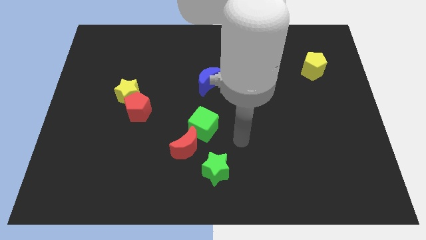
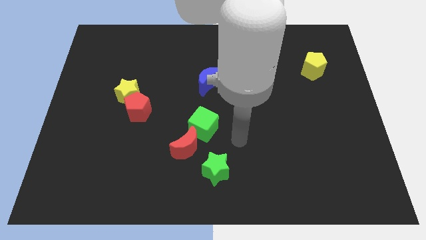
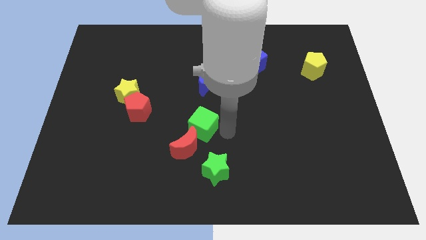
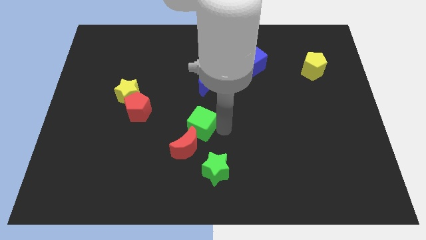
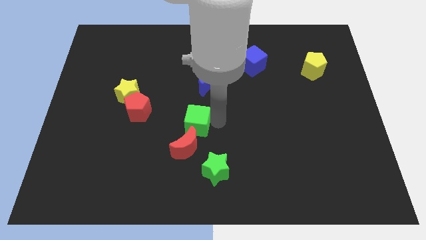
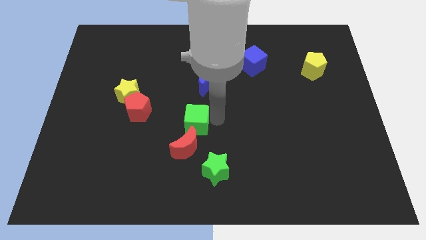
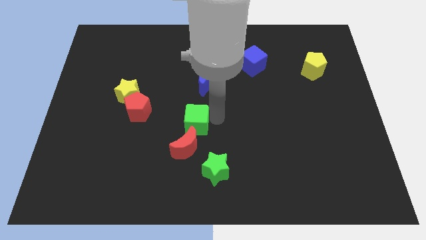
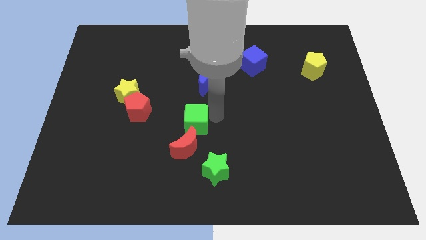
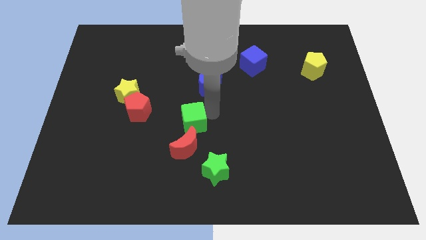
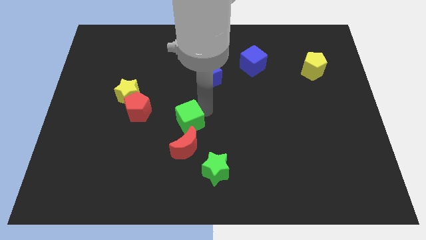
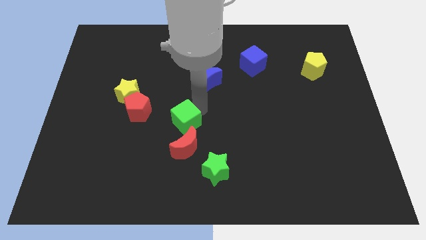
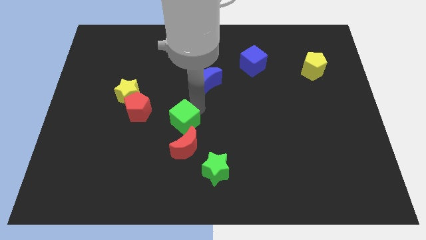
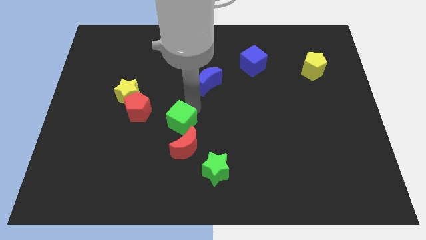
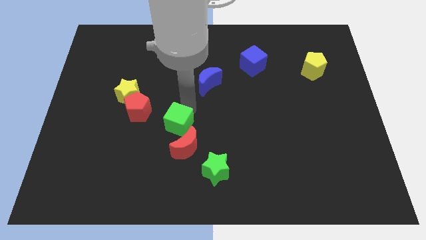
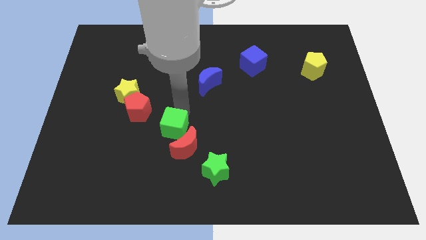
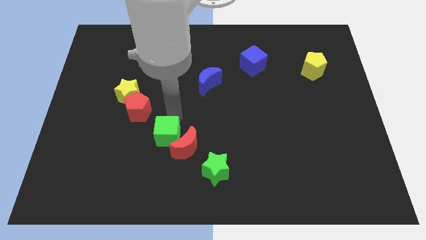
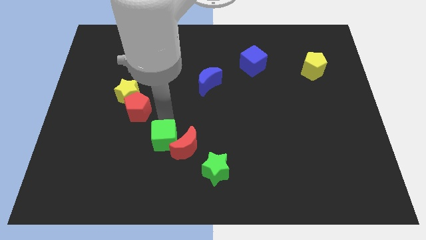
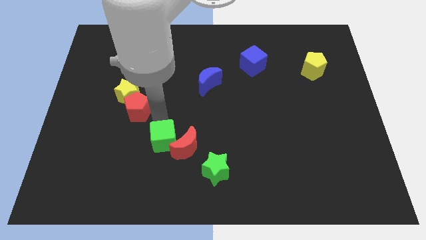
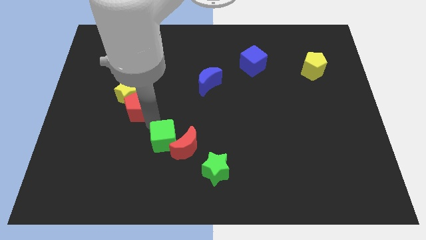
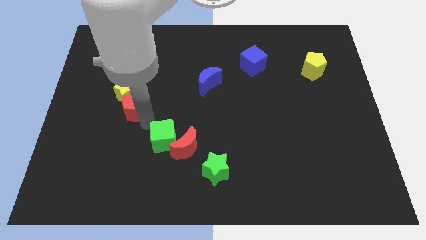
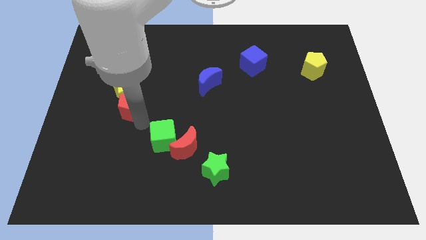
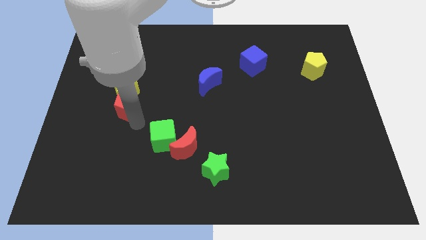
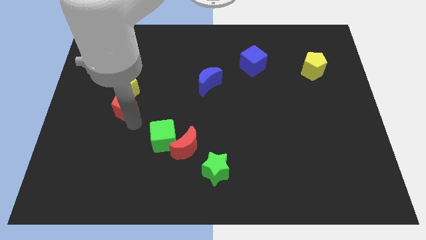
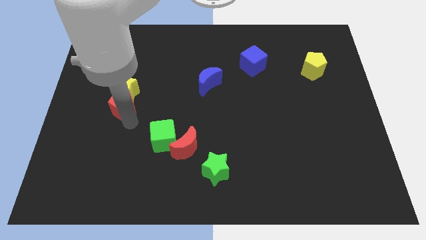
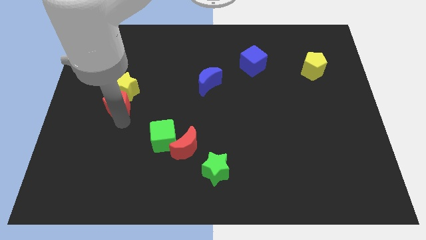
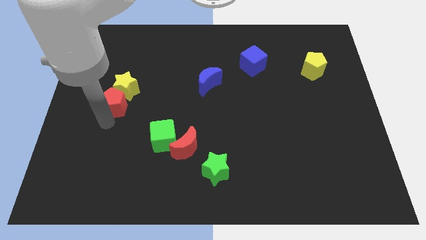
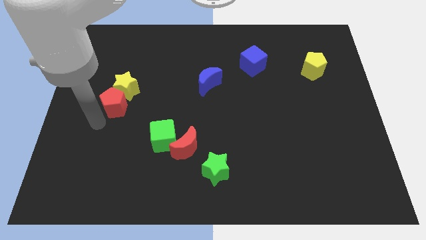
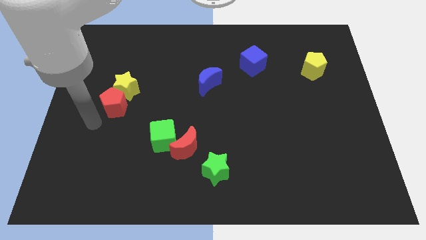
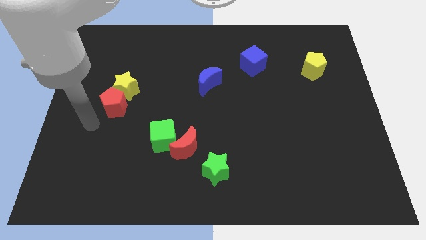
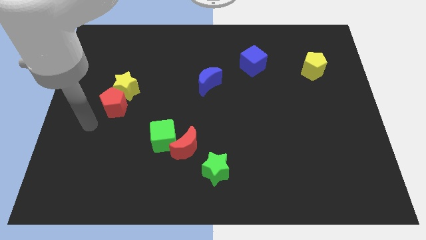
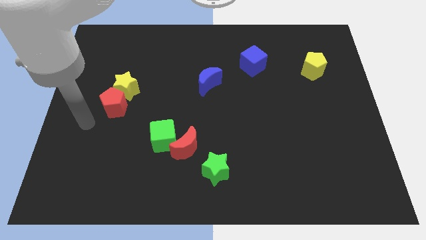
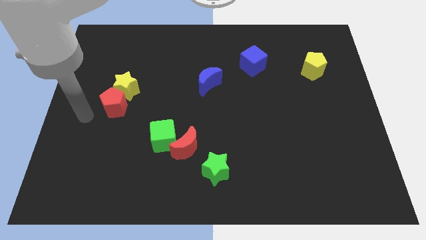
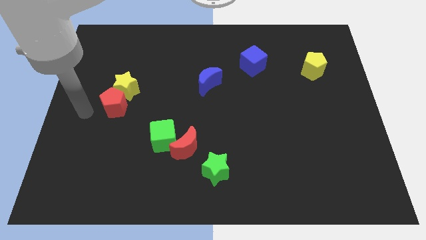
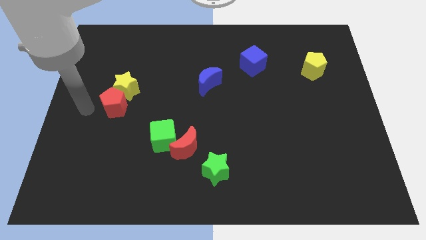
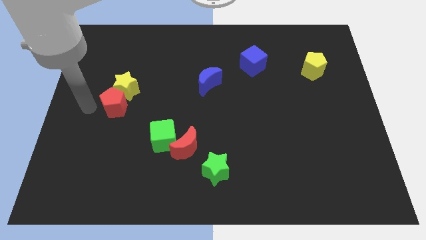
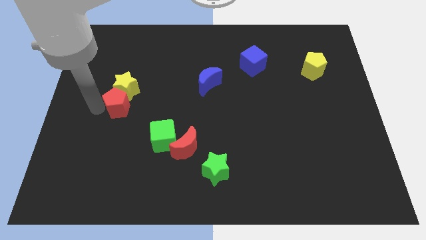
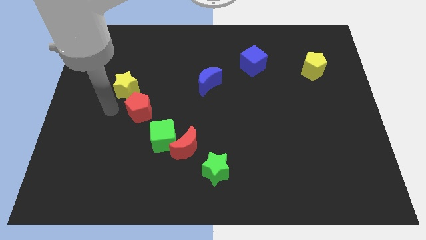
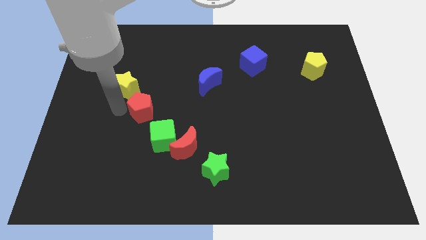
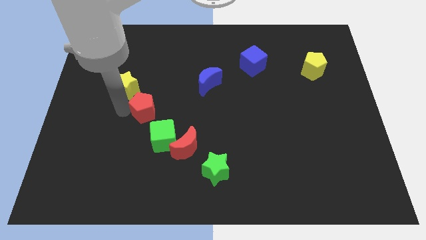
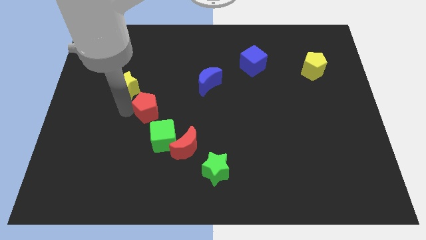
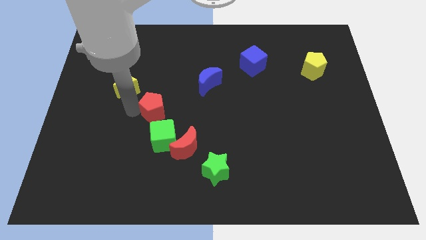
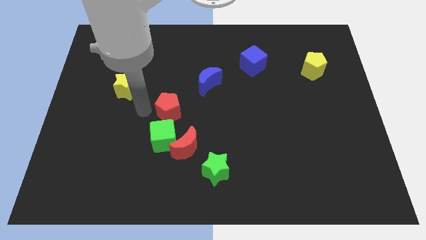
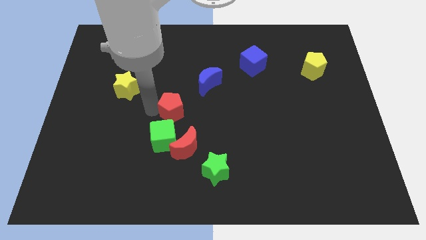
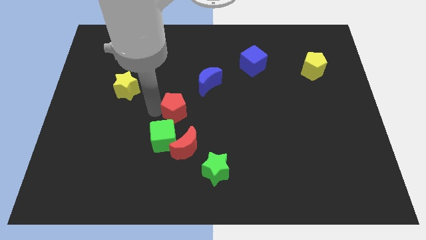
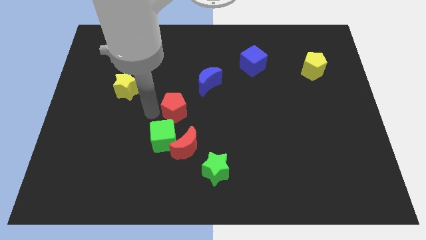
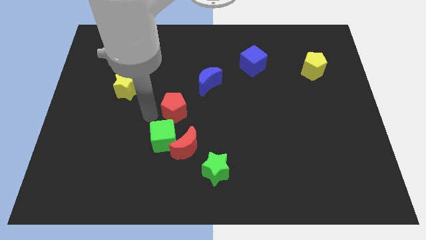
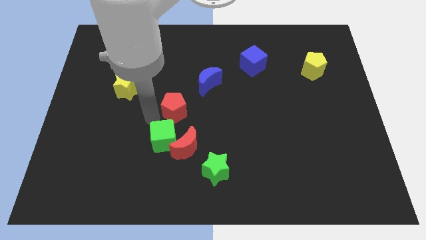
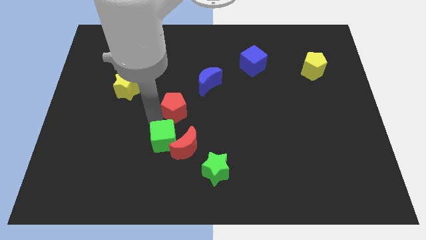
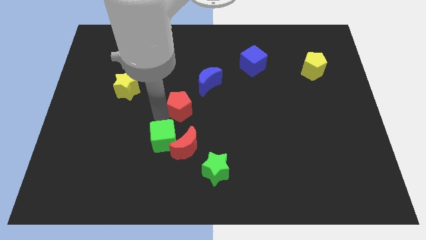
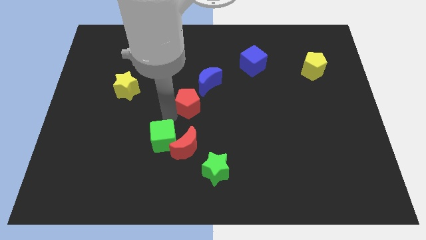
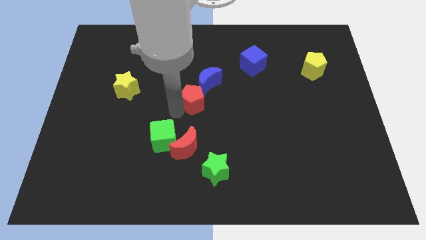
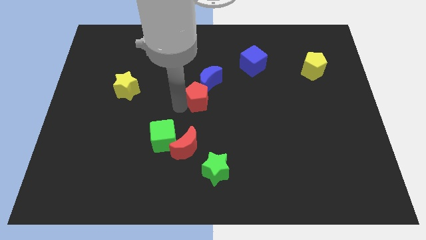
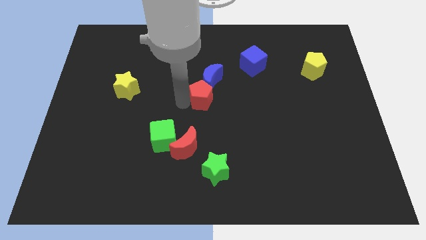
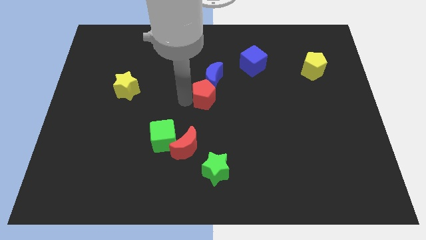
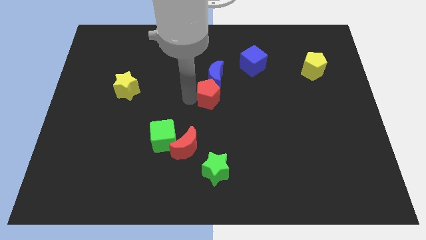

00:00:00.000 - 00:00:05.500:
push the red pentagon close to the blue moon

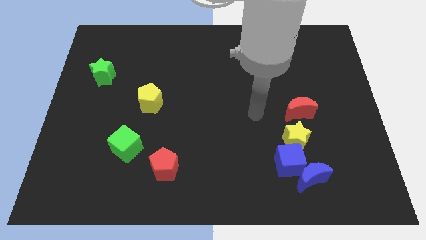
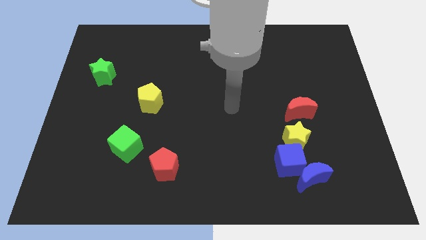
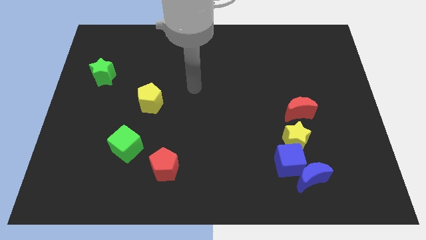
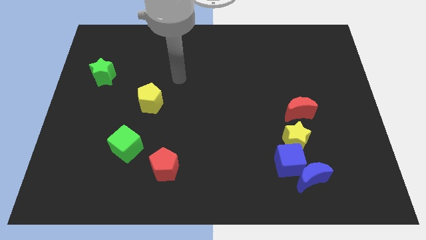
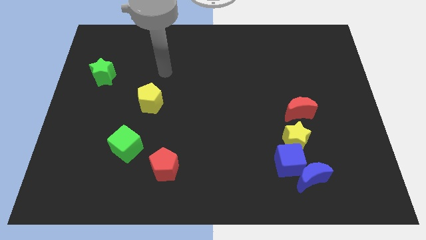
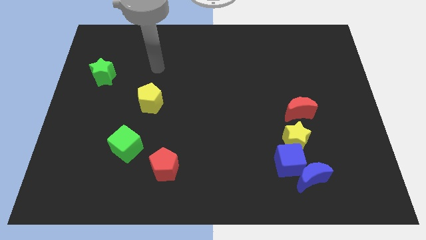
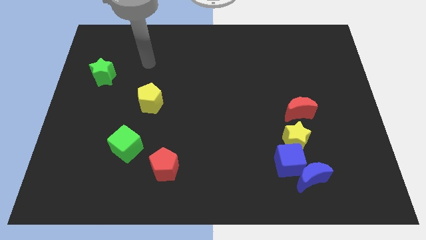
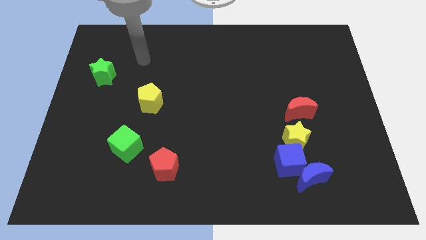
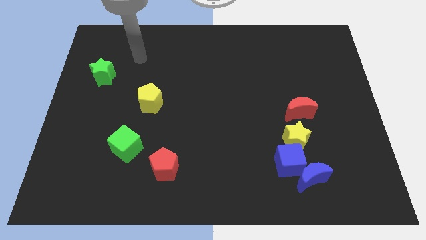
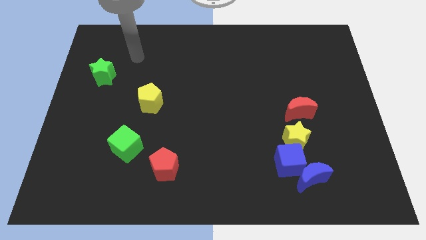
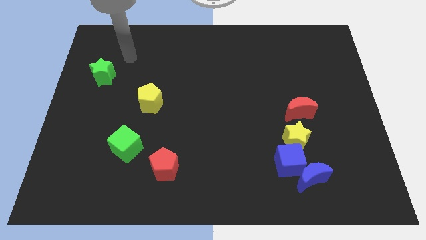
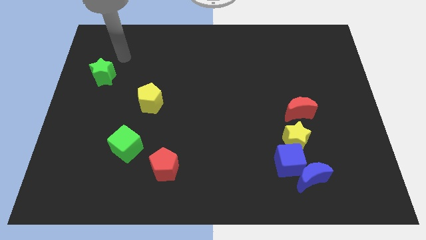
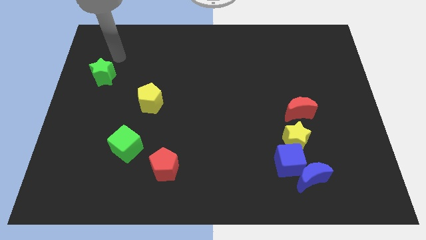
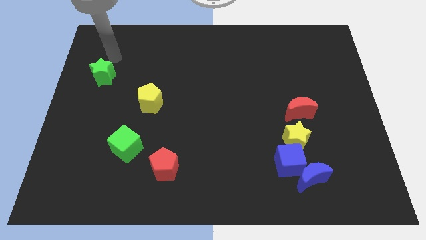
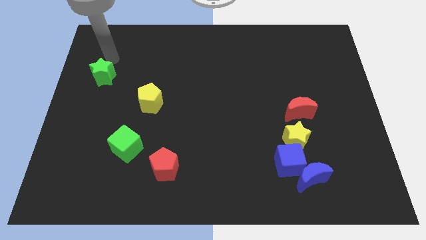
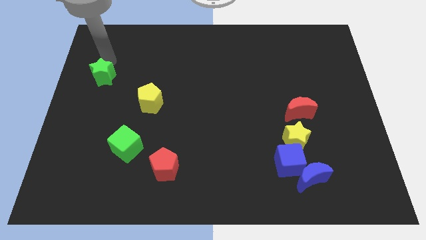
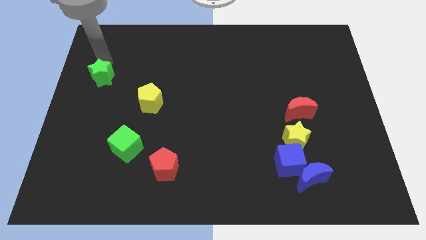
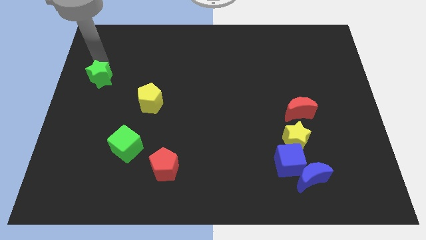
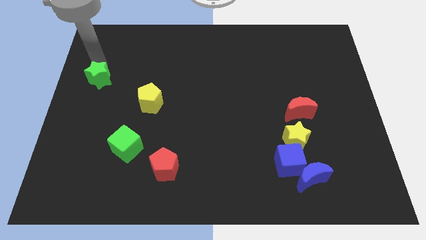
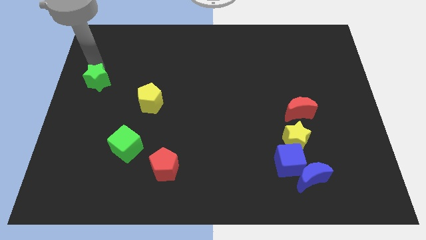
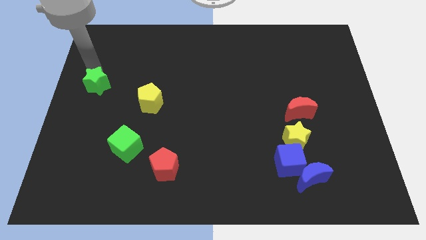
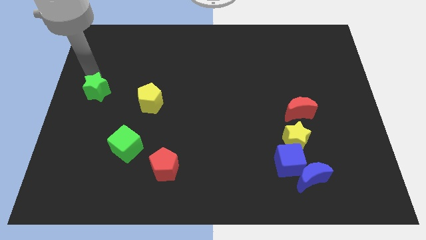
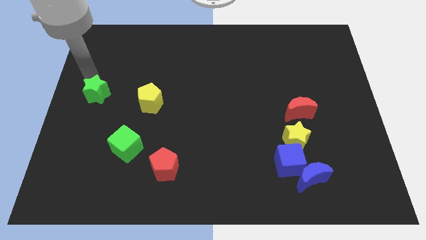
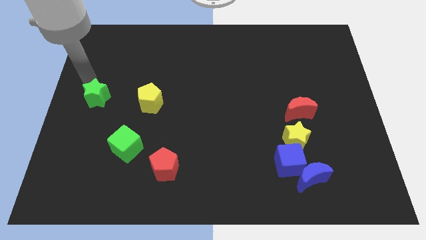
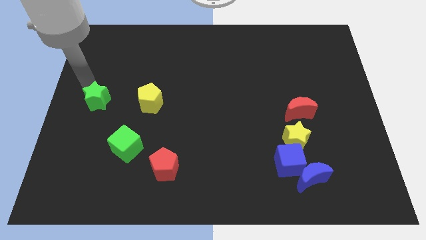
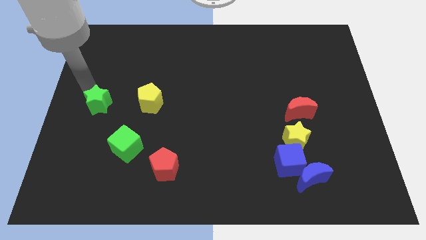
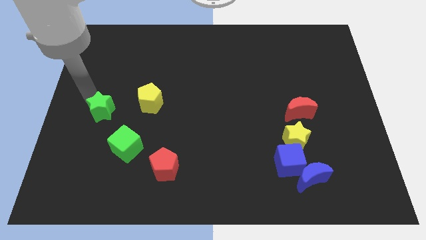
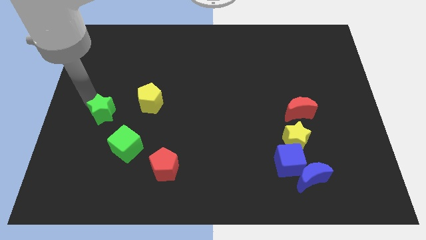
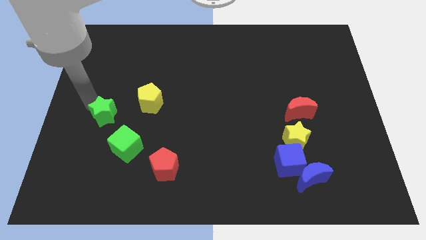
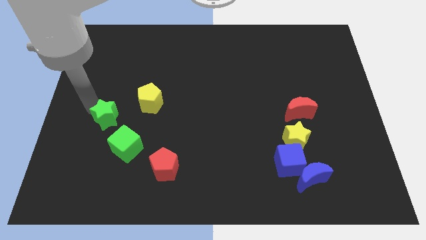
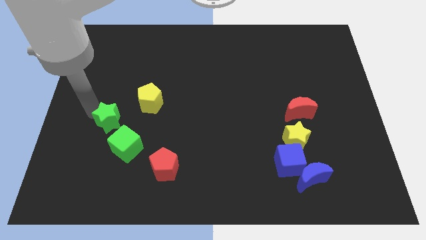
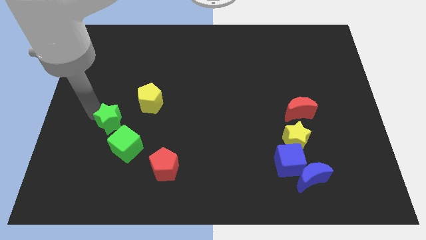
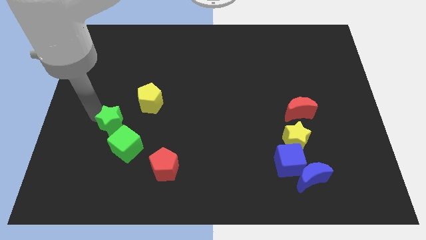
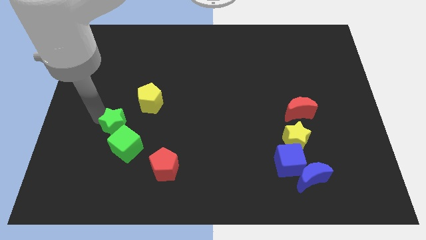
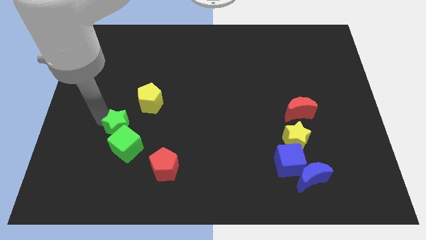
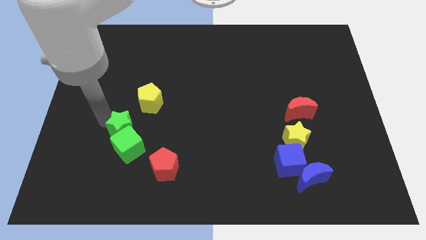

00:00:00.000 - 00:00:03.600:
slide the green star next to the green cube
